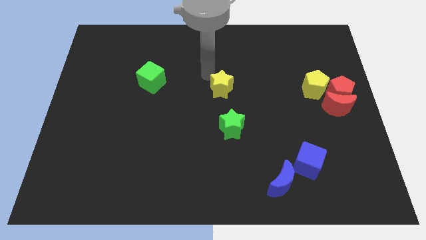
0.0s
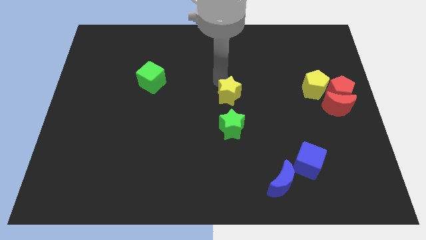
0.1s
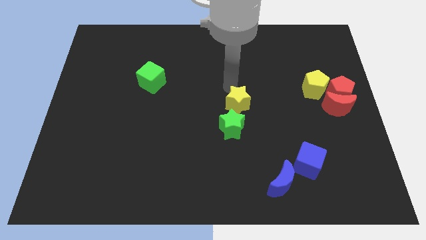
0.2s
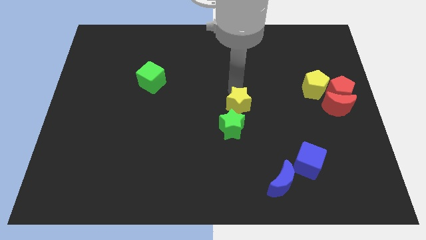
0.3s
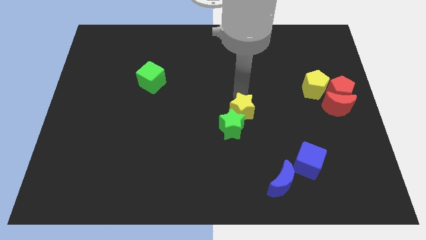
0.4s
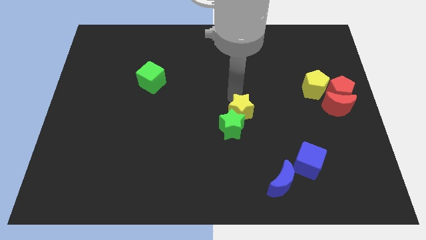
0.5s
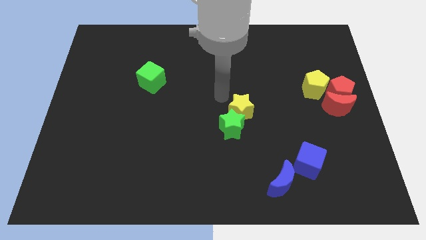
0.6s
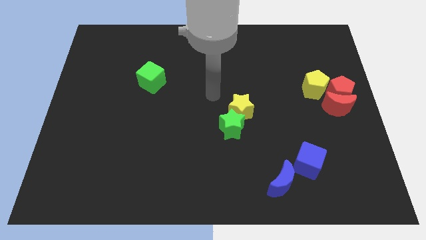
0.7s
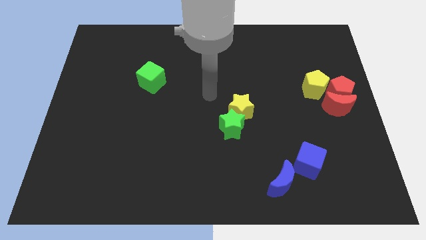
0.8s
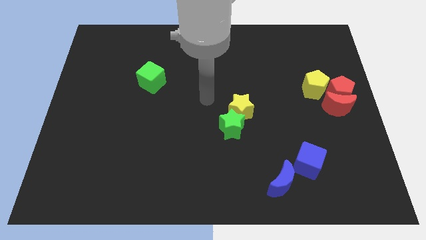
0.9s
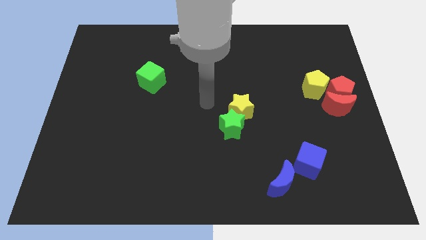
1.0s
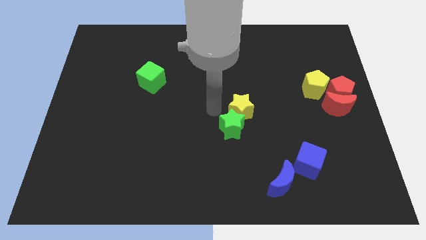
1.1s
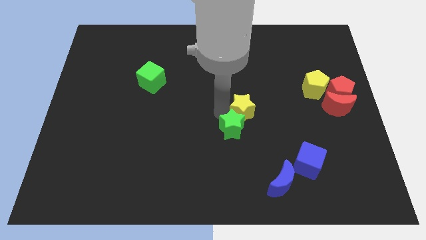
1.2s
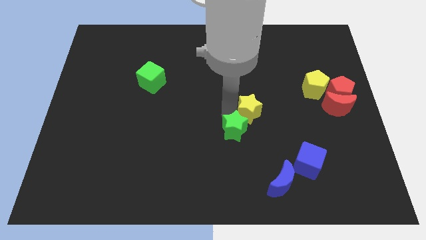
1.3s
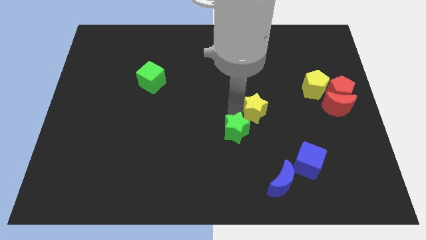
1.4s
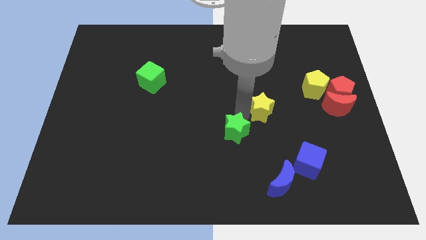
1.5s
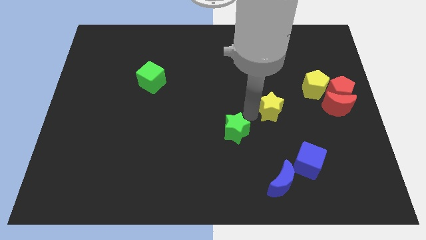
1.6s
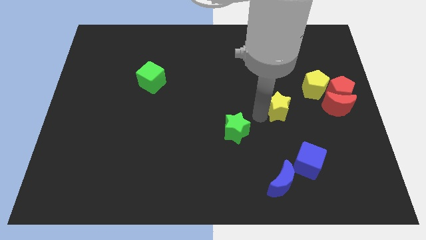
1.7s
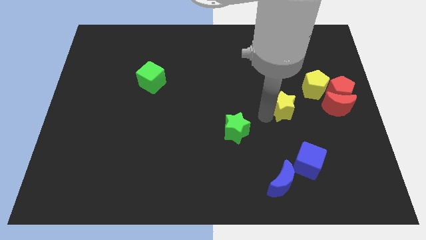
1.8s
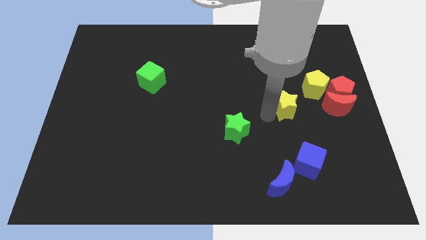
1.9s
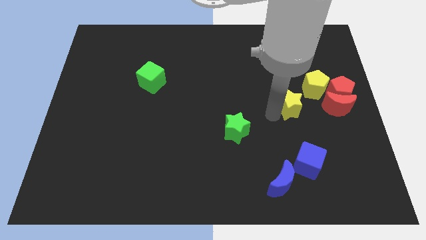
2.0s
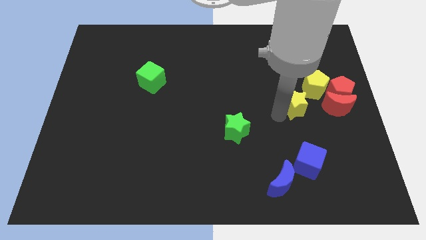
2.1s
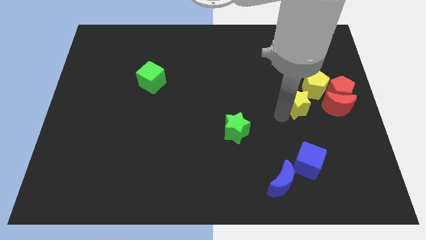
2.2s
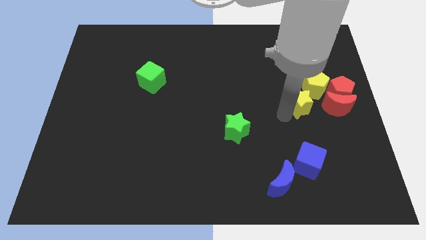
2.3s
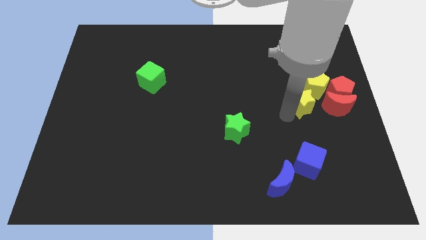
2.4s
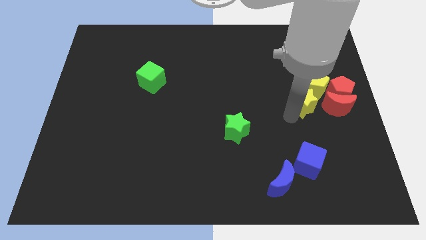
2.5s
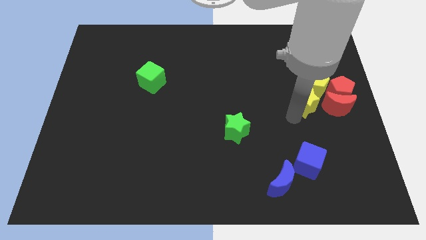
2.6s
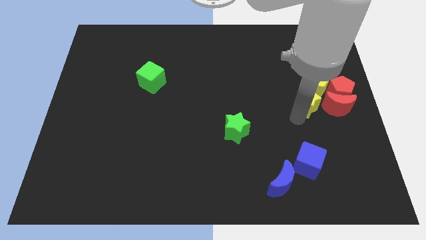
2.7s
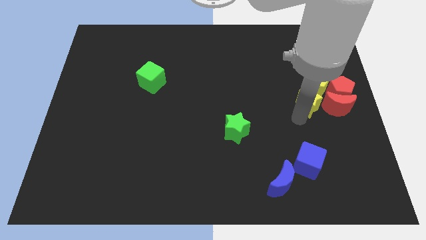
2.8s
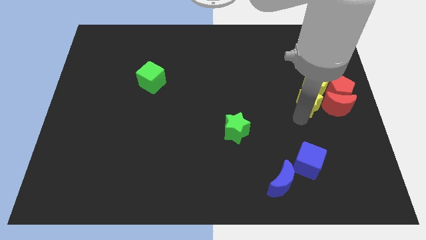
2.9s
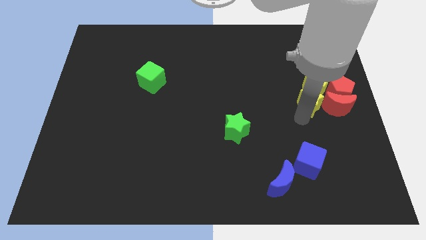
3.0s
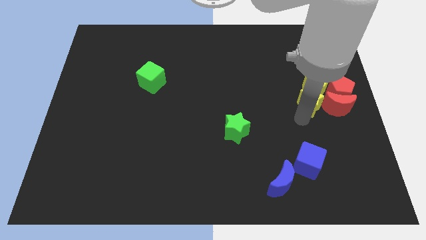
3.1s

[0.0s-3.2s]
place the yelow star to bottom of yellow pentagon

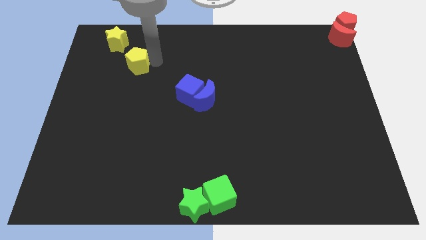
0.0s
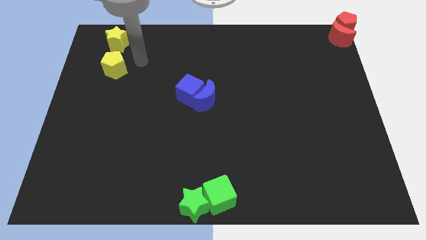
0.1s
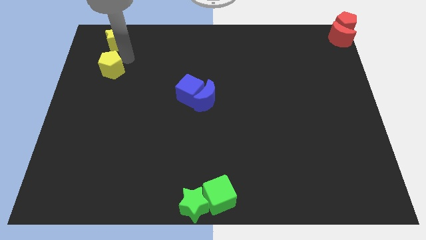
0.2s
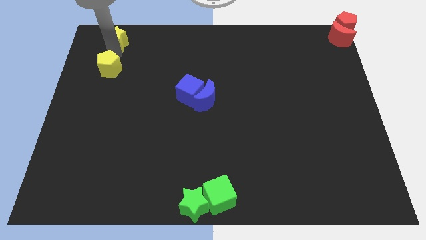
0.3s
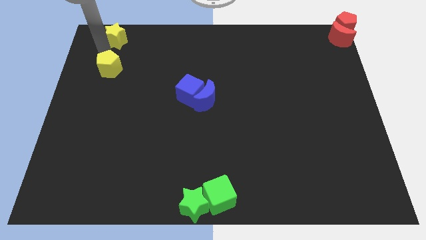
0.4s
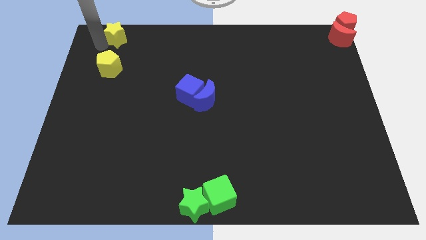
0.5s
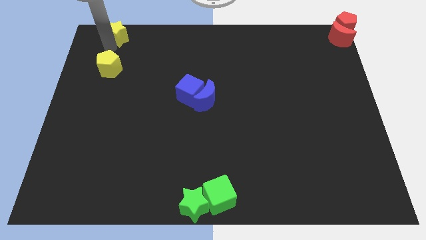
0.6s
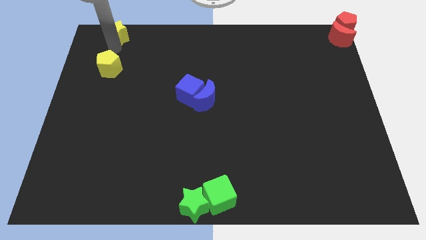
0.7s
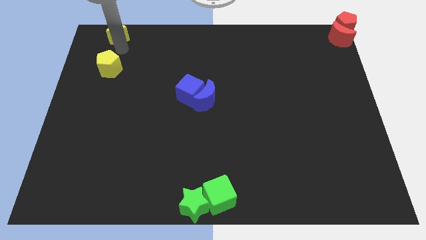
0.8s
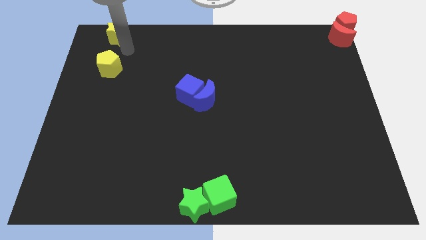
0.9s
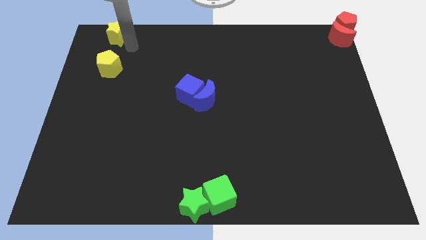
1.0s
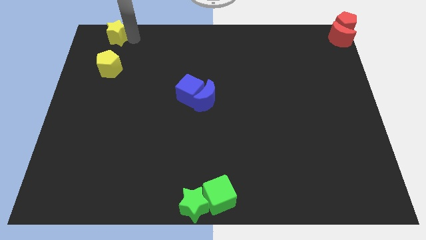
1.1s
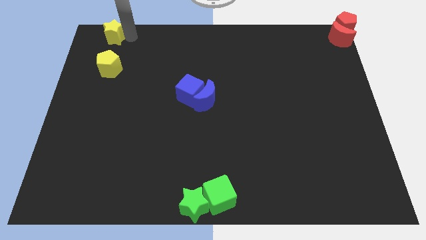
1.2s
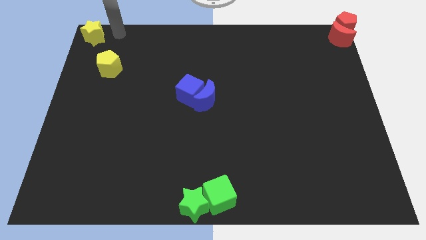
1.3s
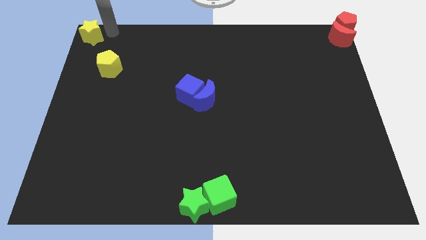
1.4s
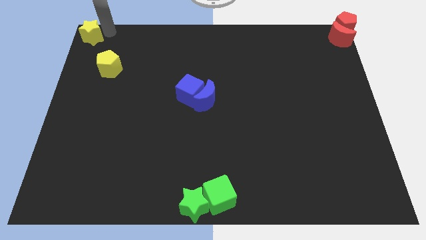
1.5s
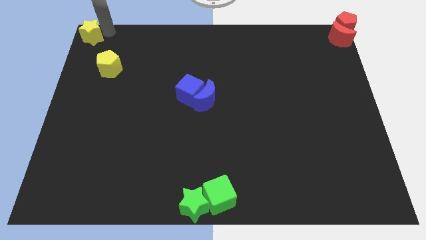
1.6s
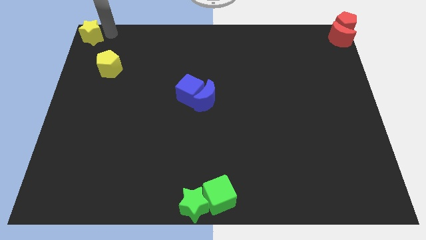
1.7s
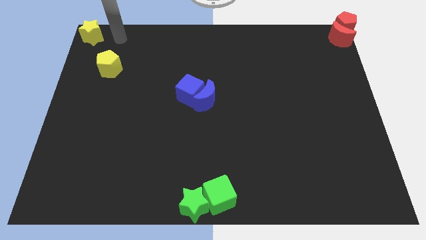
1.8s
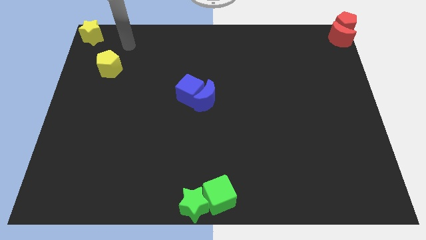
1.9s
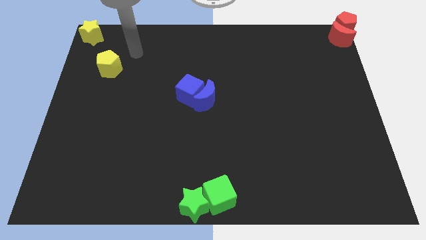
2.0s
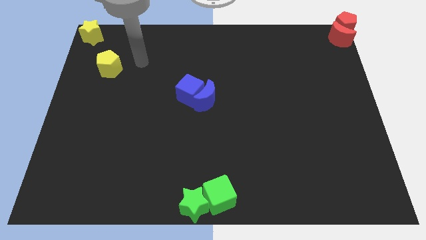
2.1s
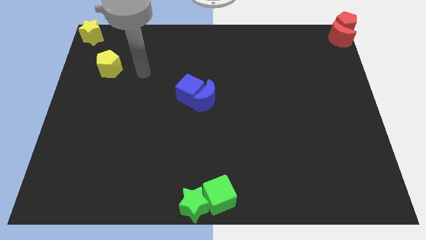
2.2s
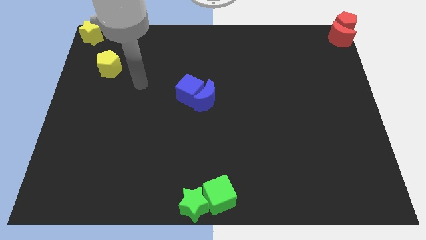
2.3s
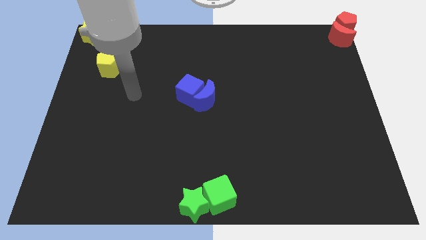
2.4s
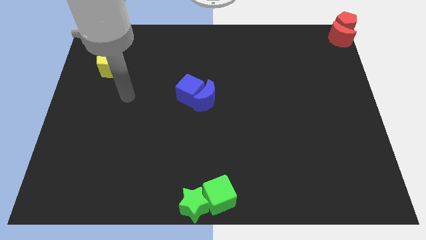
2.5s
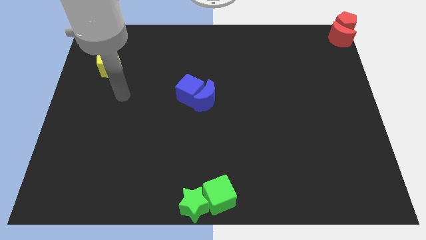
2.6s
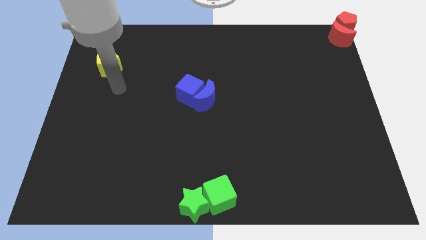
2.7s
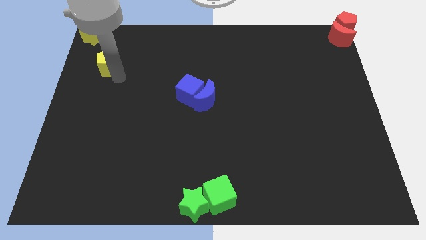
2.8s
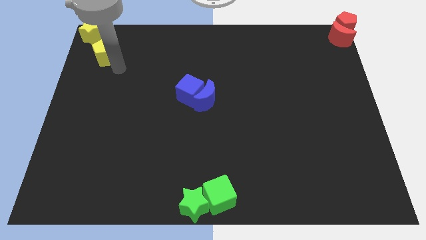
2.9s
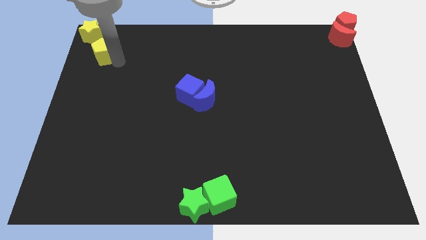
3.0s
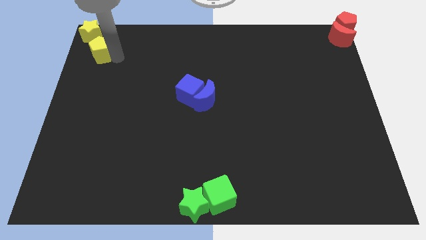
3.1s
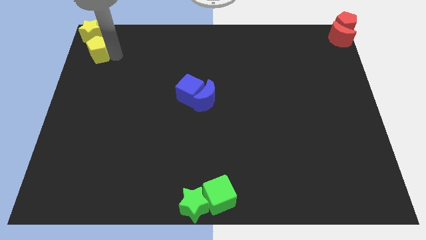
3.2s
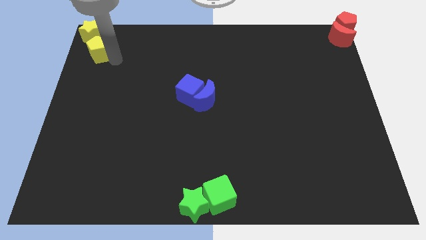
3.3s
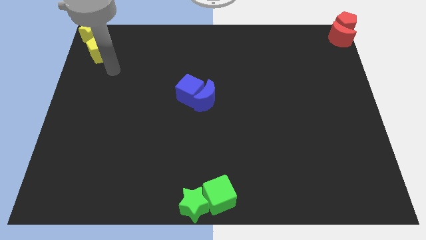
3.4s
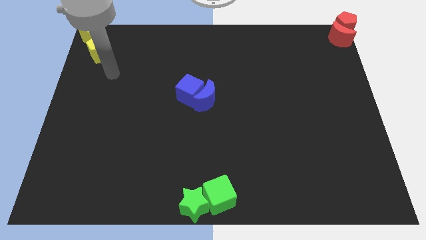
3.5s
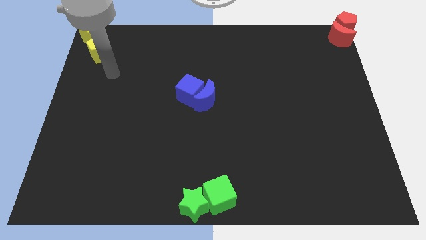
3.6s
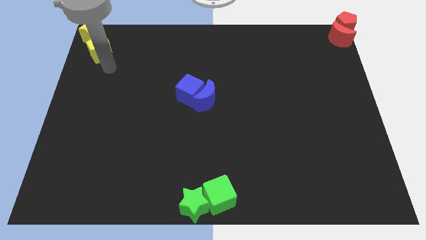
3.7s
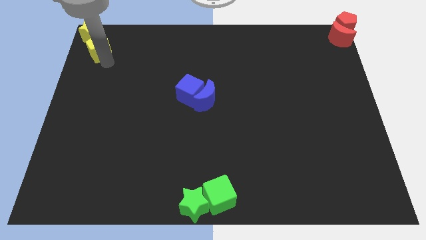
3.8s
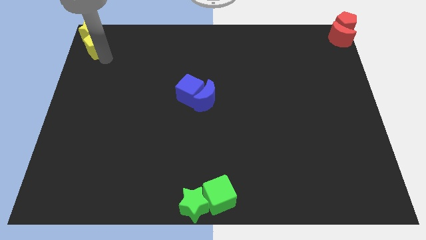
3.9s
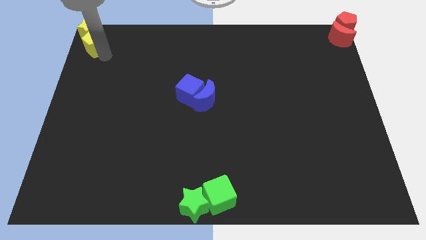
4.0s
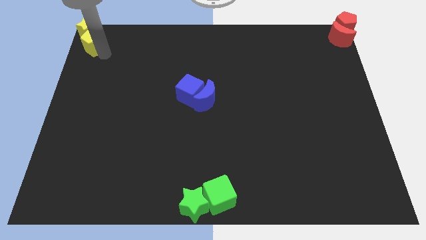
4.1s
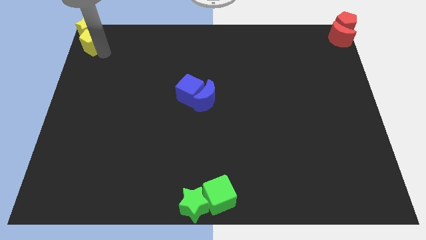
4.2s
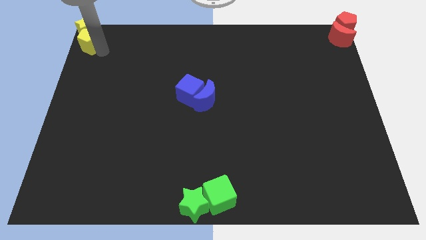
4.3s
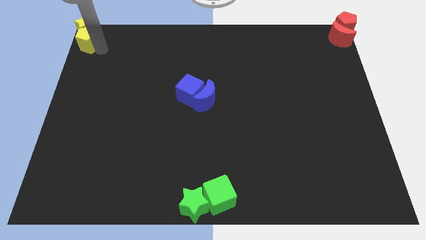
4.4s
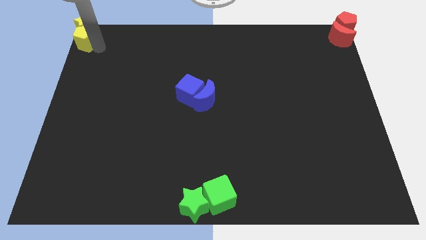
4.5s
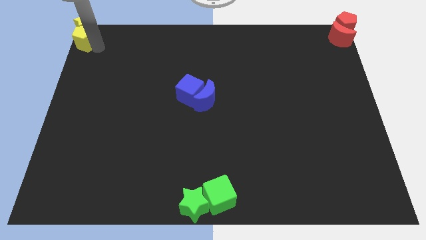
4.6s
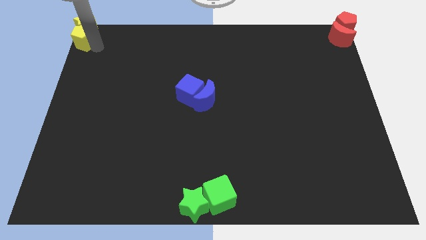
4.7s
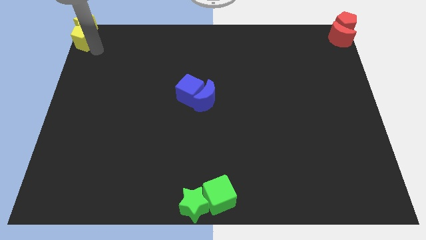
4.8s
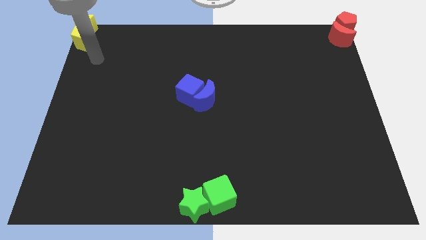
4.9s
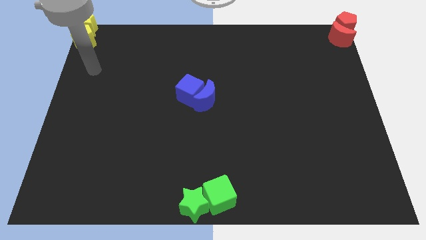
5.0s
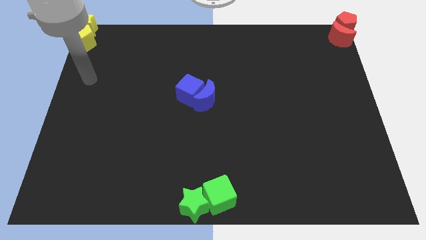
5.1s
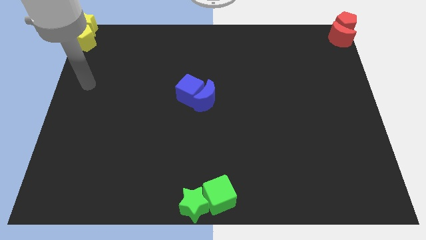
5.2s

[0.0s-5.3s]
move the yellow pentagon and yellow star to the top left of the board

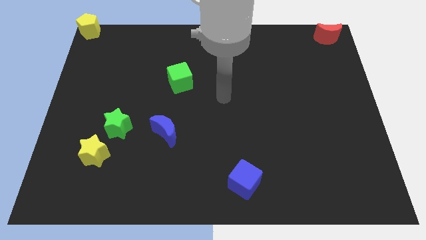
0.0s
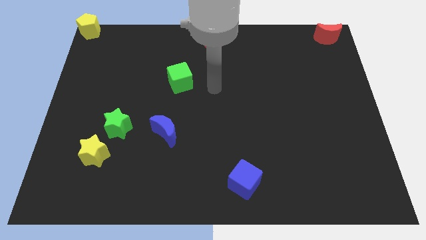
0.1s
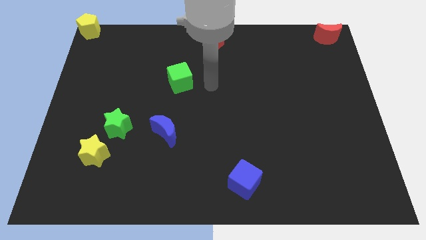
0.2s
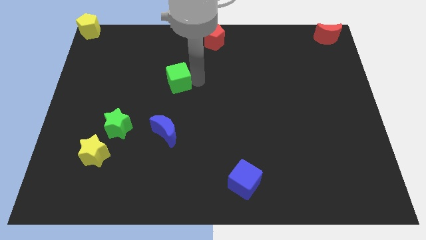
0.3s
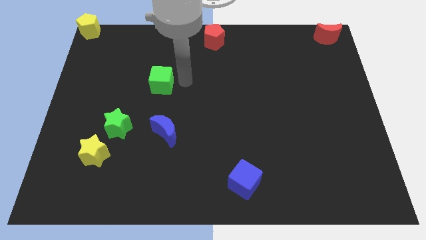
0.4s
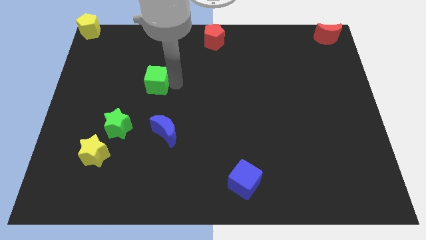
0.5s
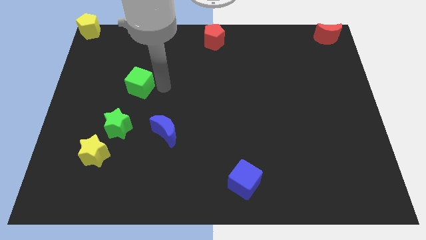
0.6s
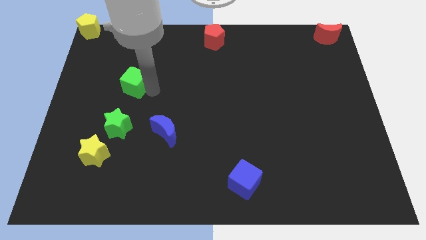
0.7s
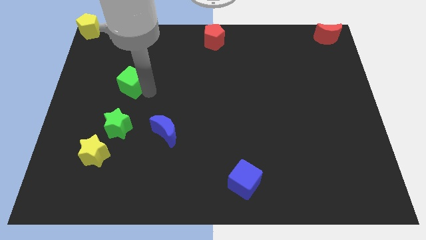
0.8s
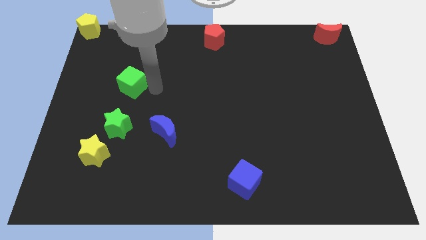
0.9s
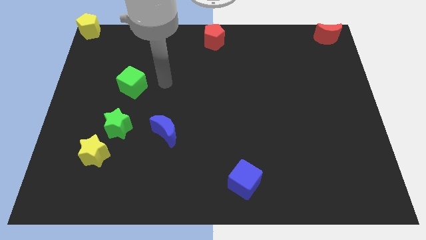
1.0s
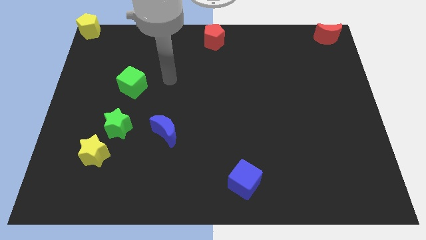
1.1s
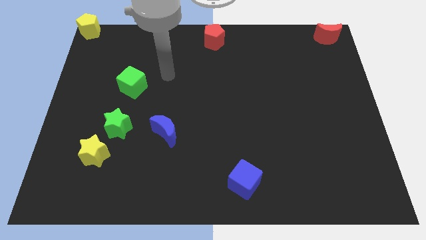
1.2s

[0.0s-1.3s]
push the green cube to the left
